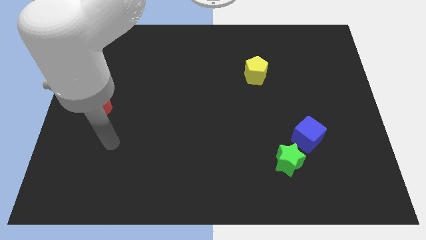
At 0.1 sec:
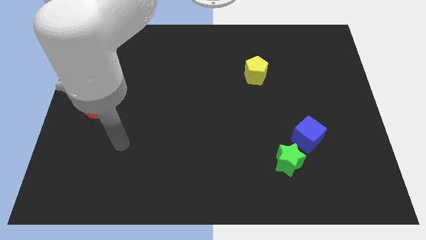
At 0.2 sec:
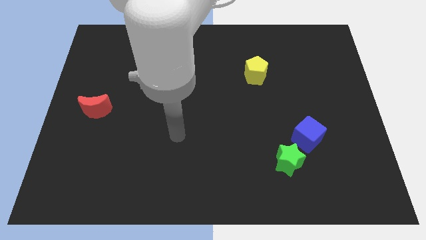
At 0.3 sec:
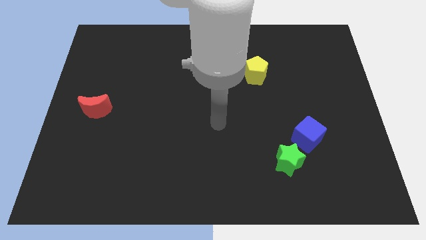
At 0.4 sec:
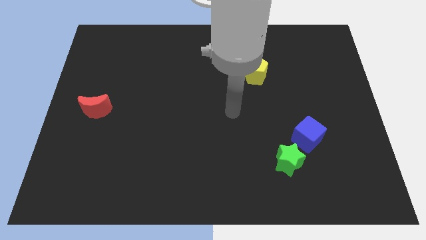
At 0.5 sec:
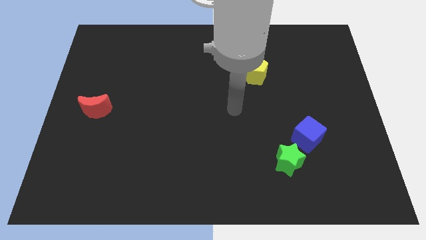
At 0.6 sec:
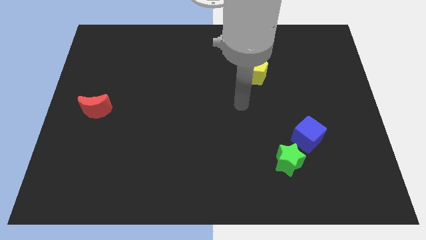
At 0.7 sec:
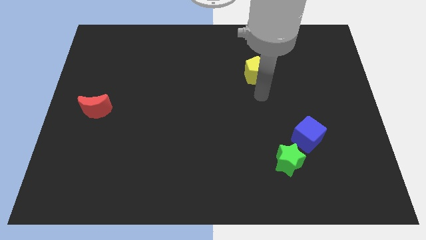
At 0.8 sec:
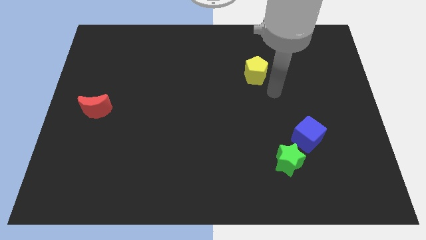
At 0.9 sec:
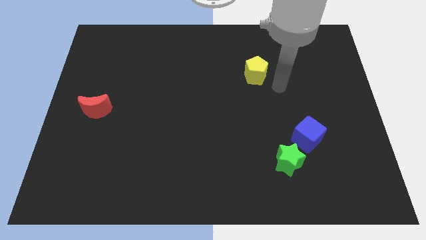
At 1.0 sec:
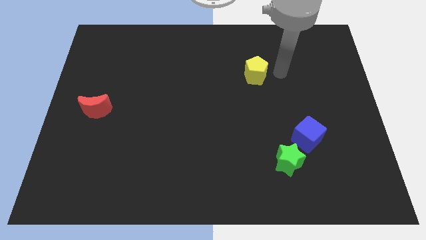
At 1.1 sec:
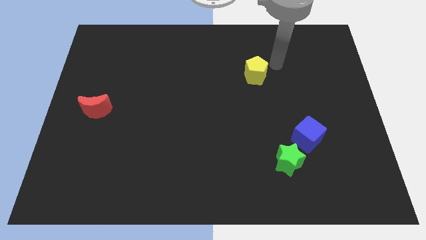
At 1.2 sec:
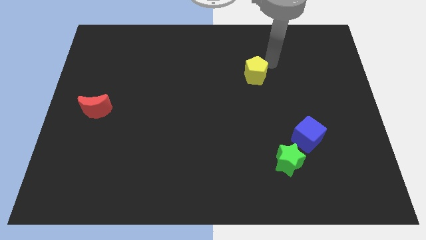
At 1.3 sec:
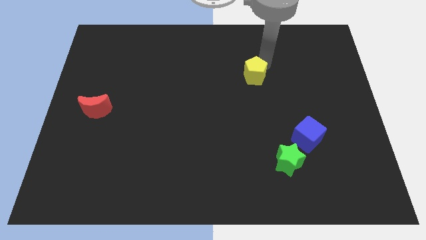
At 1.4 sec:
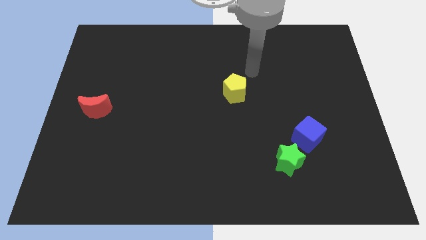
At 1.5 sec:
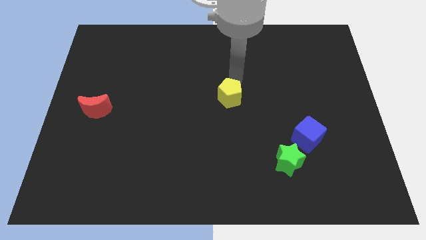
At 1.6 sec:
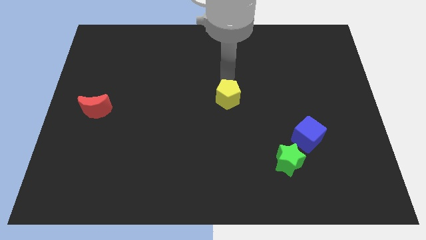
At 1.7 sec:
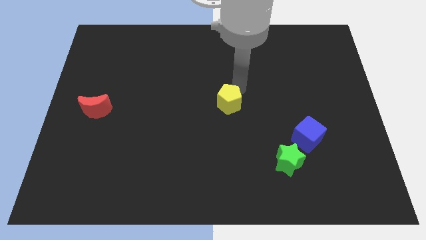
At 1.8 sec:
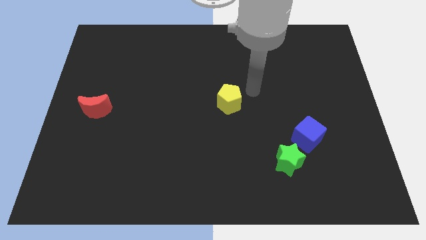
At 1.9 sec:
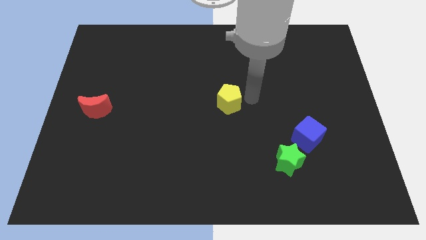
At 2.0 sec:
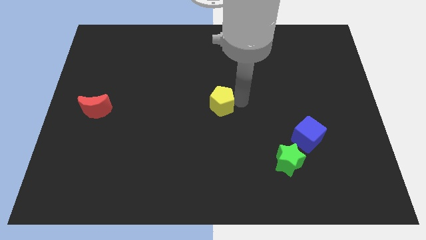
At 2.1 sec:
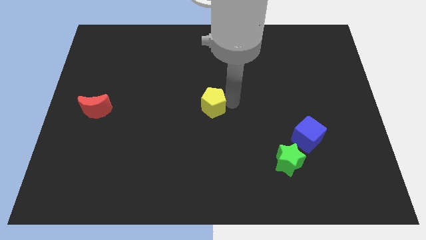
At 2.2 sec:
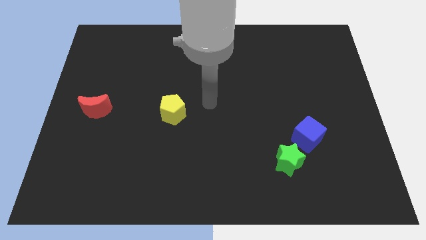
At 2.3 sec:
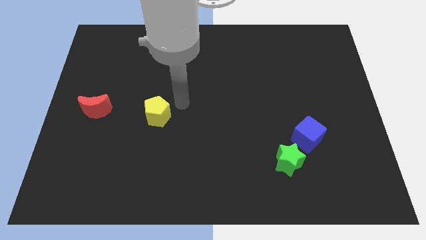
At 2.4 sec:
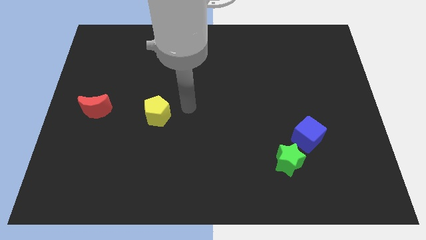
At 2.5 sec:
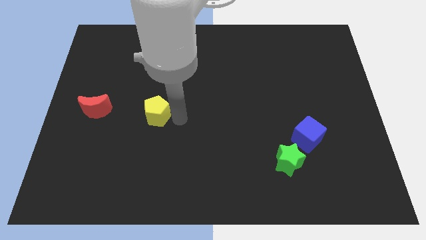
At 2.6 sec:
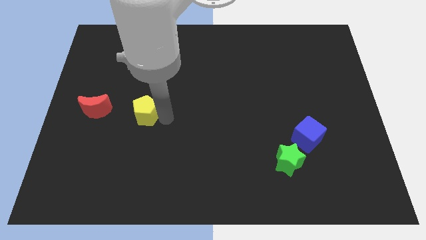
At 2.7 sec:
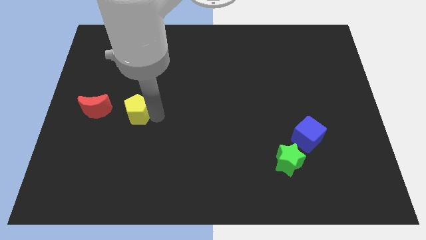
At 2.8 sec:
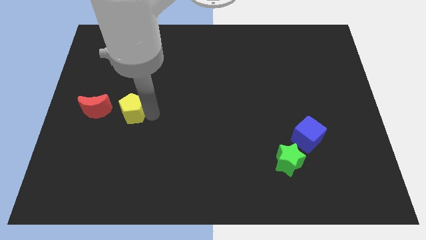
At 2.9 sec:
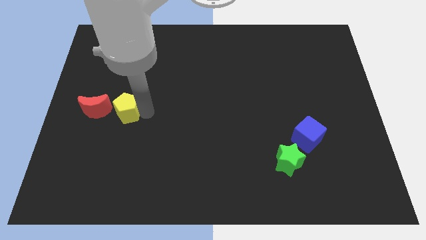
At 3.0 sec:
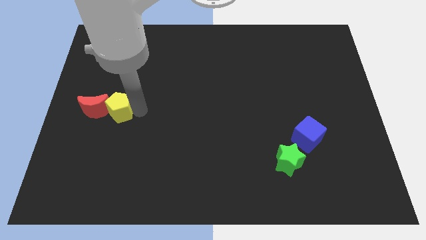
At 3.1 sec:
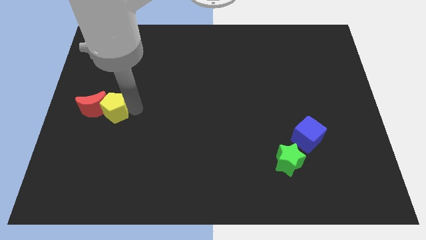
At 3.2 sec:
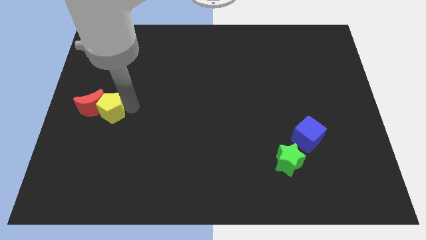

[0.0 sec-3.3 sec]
move the pentagon close to the moon

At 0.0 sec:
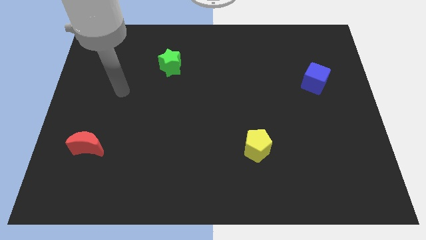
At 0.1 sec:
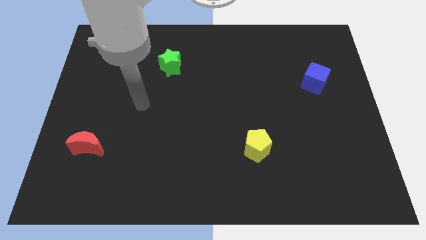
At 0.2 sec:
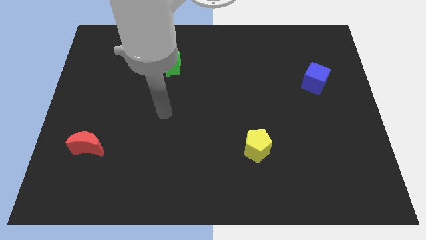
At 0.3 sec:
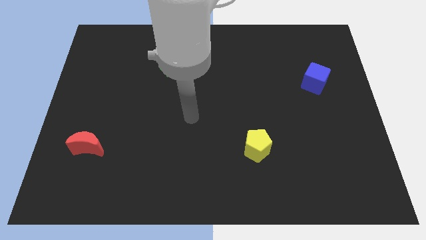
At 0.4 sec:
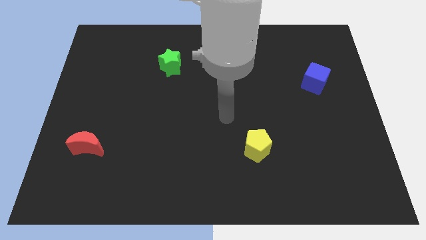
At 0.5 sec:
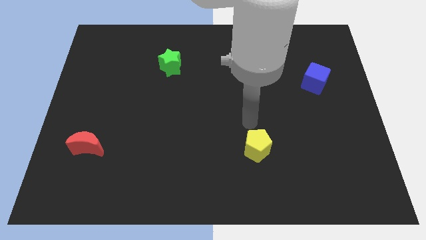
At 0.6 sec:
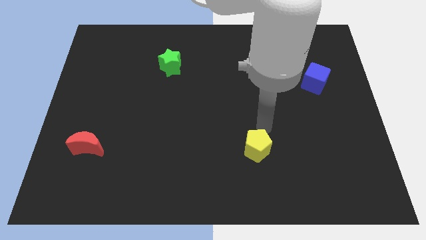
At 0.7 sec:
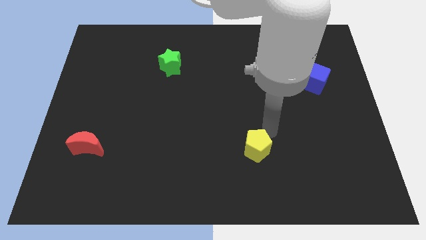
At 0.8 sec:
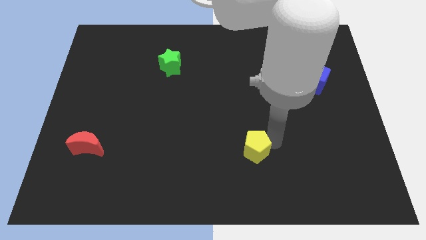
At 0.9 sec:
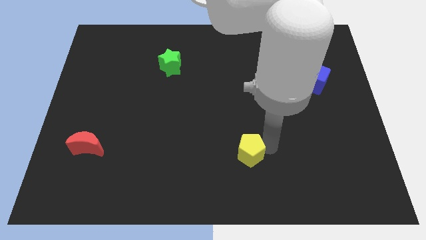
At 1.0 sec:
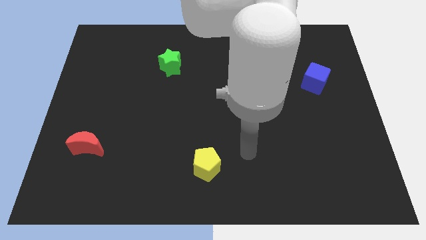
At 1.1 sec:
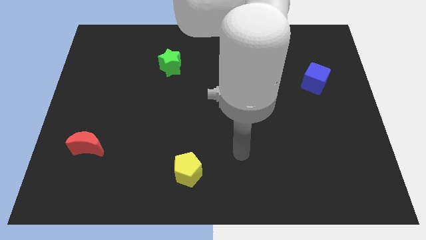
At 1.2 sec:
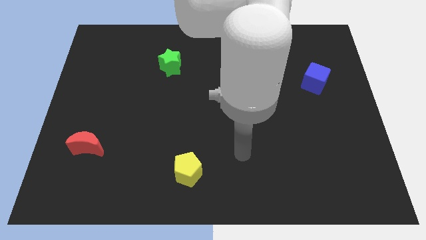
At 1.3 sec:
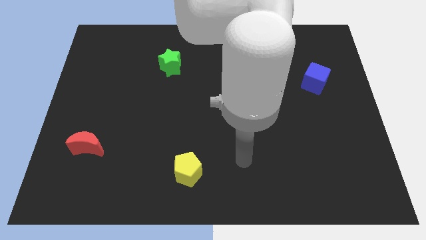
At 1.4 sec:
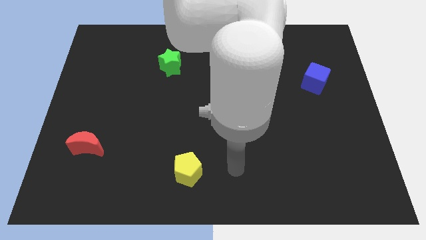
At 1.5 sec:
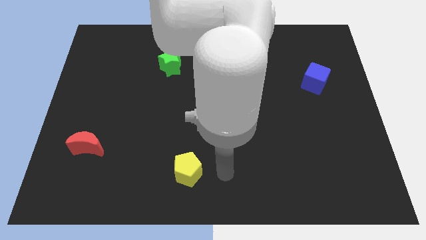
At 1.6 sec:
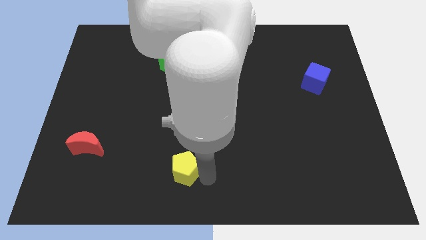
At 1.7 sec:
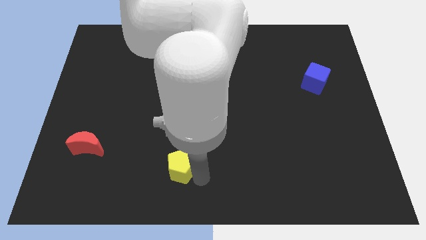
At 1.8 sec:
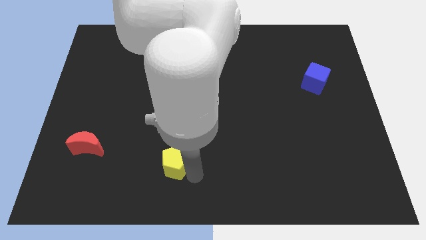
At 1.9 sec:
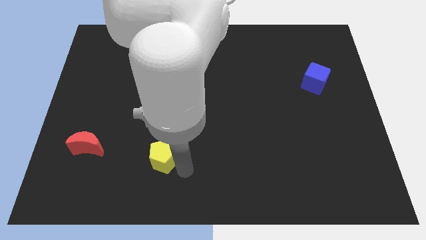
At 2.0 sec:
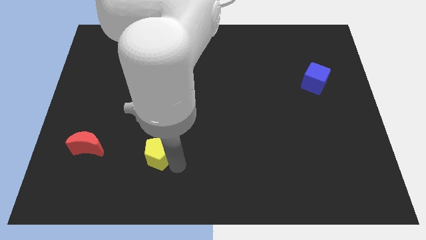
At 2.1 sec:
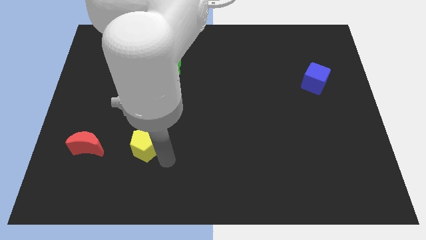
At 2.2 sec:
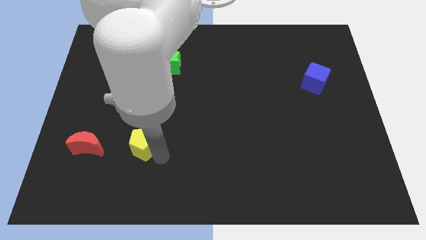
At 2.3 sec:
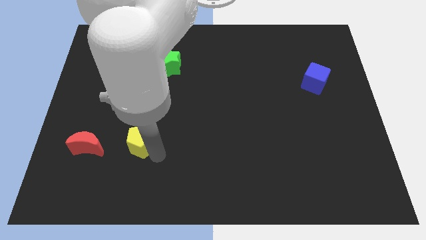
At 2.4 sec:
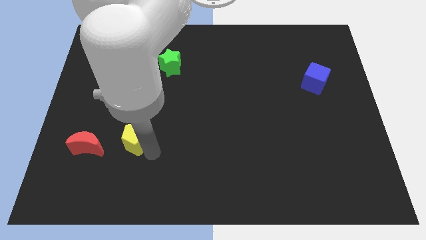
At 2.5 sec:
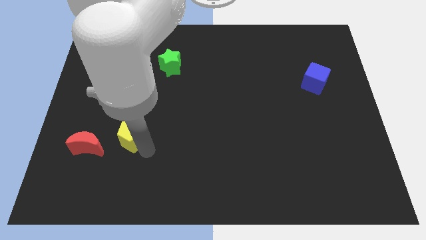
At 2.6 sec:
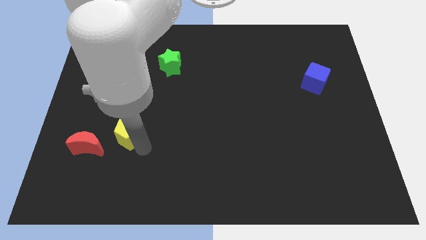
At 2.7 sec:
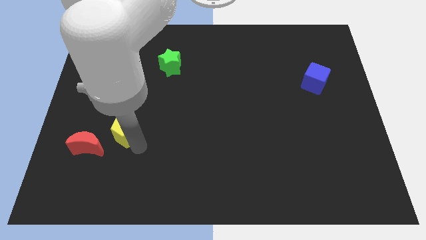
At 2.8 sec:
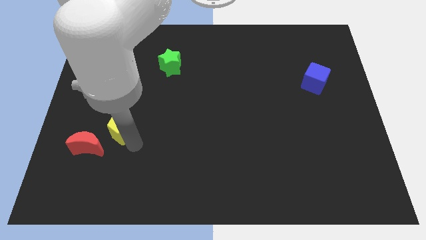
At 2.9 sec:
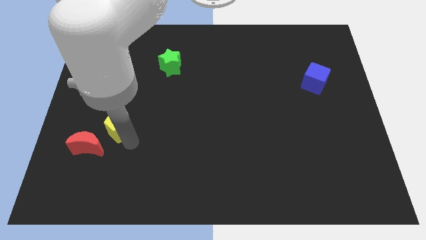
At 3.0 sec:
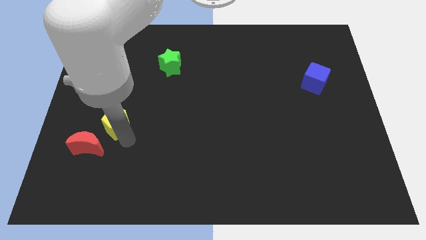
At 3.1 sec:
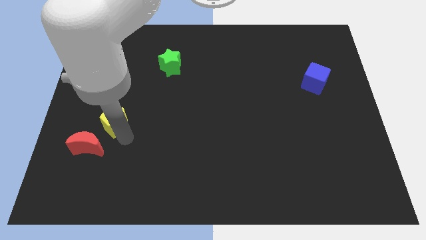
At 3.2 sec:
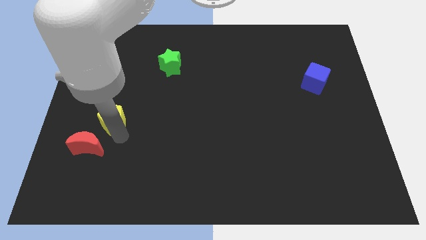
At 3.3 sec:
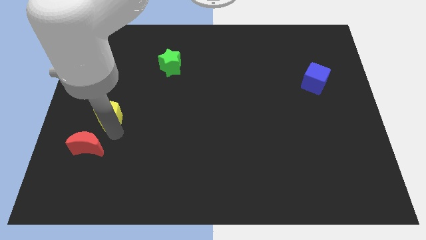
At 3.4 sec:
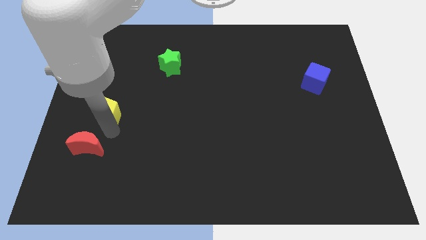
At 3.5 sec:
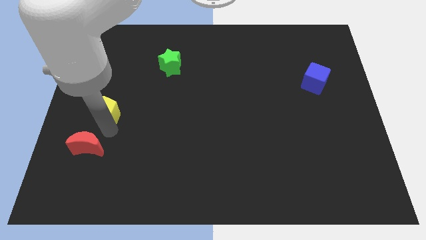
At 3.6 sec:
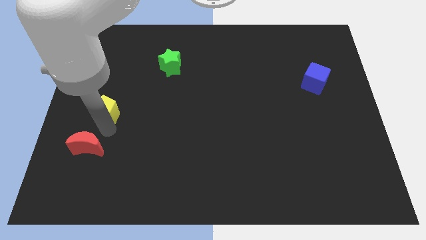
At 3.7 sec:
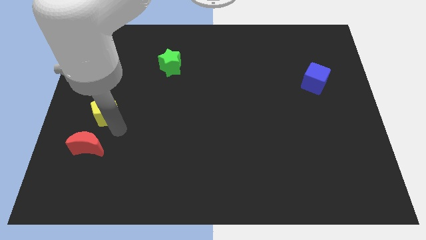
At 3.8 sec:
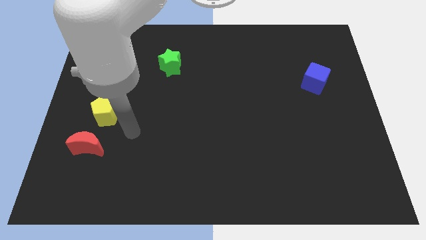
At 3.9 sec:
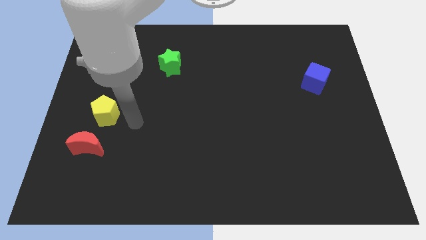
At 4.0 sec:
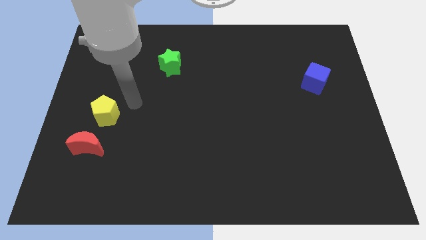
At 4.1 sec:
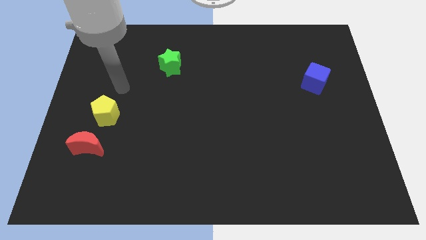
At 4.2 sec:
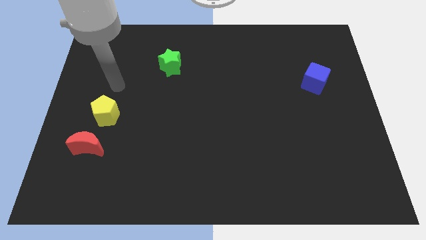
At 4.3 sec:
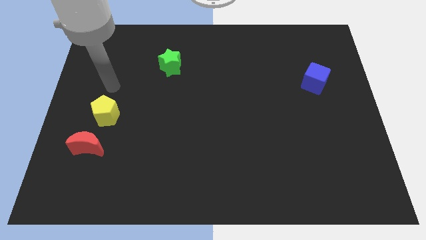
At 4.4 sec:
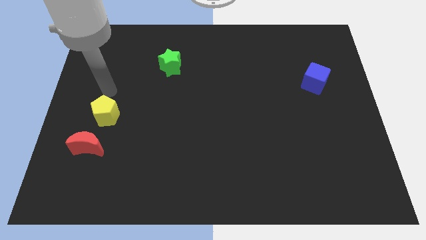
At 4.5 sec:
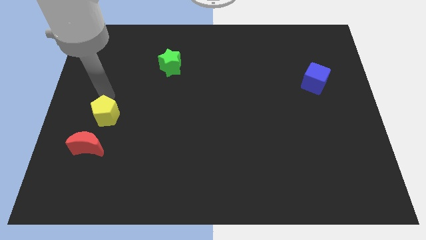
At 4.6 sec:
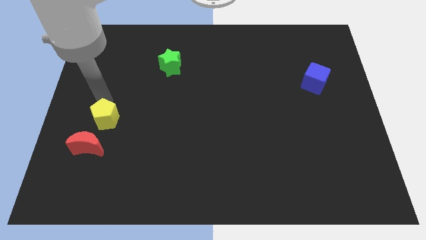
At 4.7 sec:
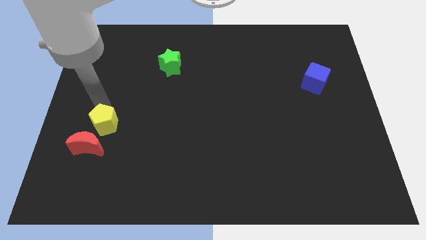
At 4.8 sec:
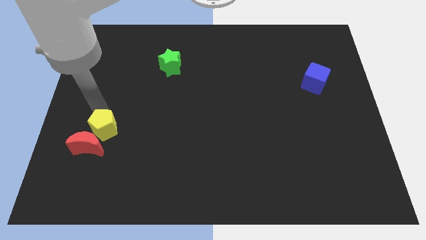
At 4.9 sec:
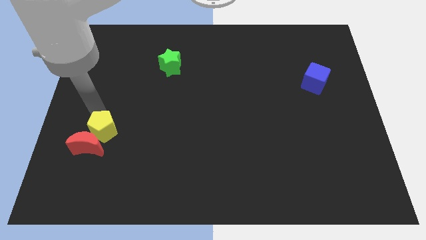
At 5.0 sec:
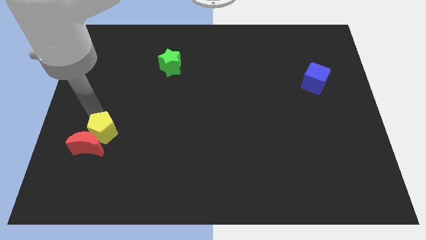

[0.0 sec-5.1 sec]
push the yellow block close to the red block

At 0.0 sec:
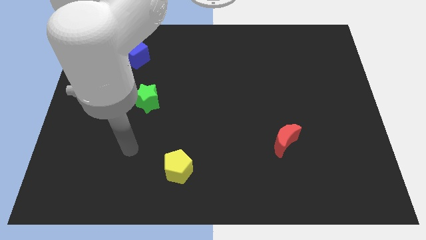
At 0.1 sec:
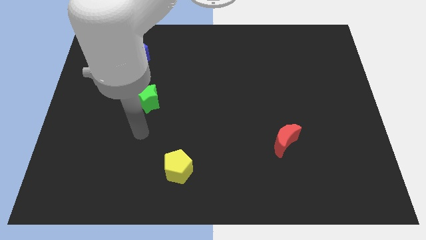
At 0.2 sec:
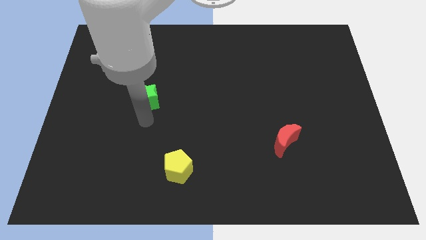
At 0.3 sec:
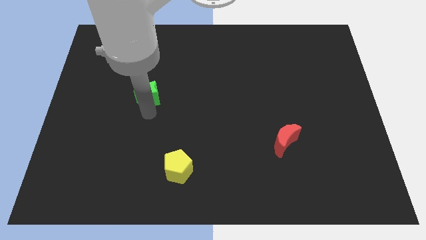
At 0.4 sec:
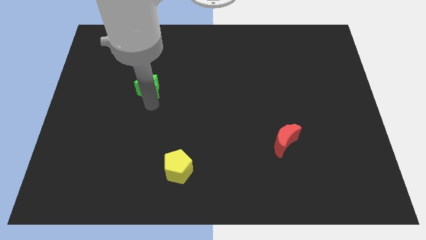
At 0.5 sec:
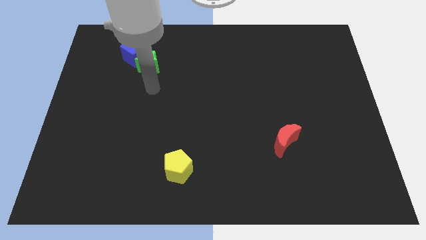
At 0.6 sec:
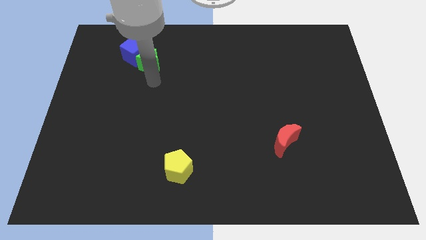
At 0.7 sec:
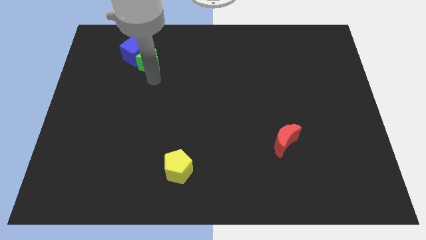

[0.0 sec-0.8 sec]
push the green star to the blue cube
